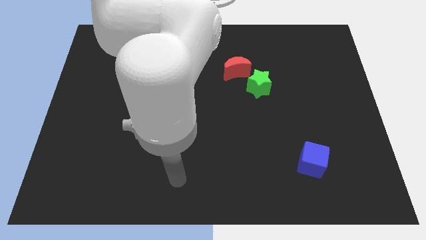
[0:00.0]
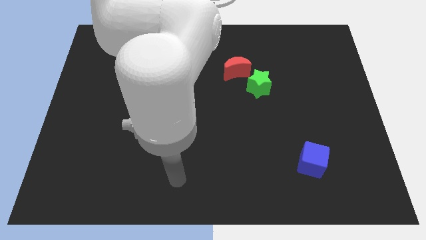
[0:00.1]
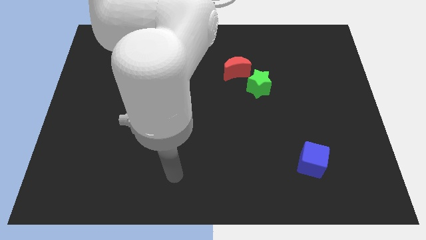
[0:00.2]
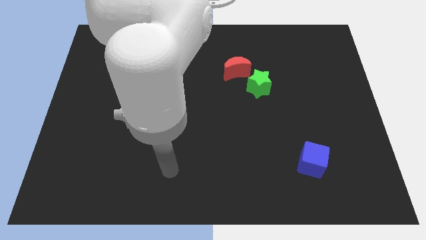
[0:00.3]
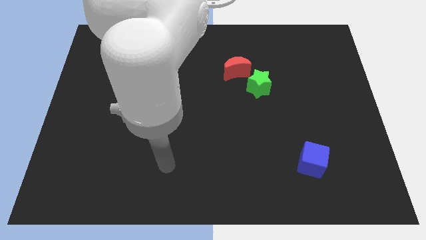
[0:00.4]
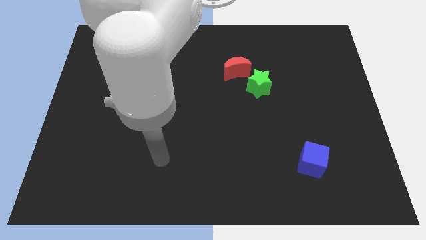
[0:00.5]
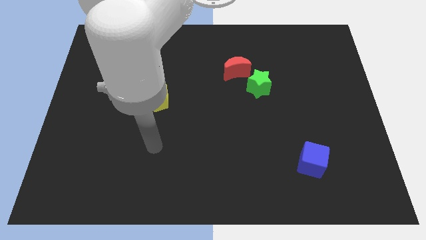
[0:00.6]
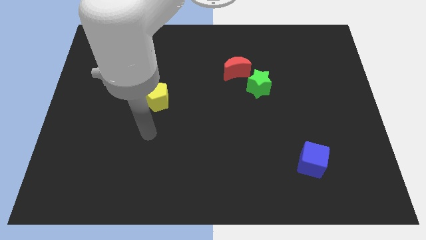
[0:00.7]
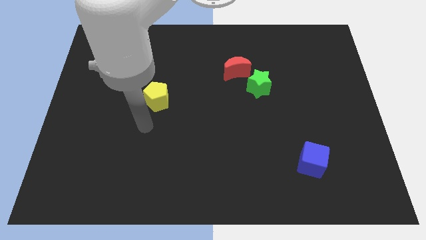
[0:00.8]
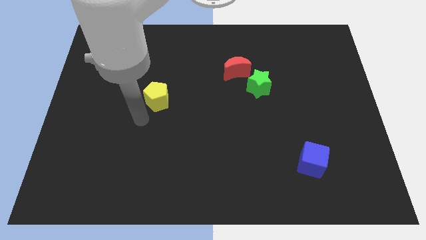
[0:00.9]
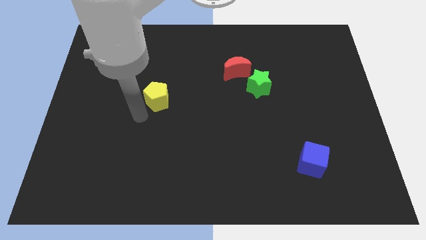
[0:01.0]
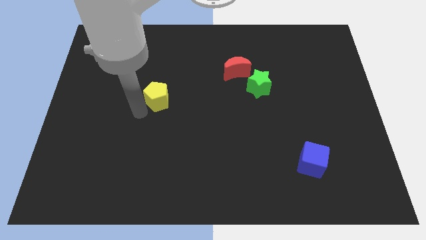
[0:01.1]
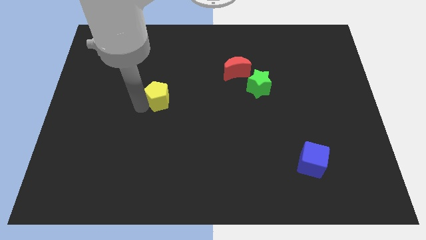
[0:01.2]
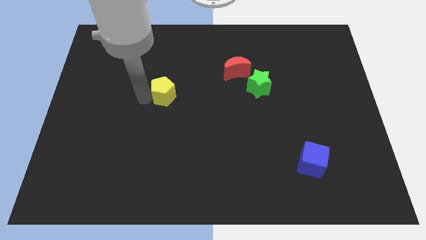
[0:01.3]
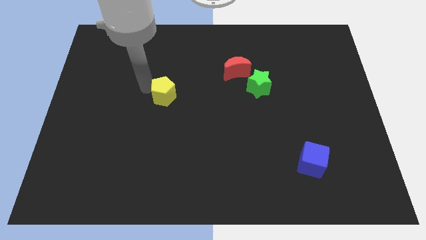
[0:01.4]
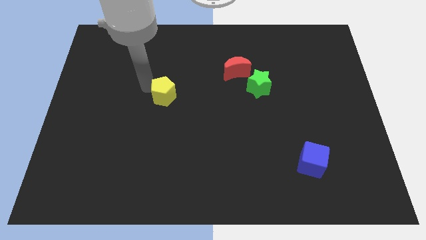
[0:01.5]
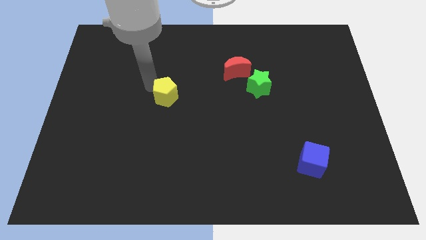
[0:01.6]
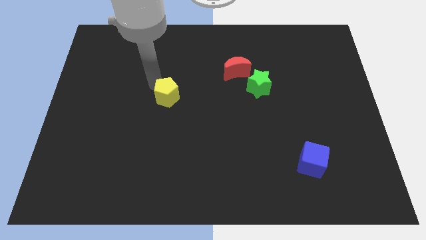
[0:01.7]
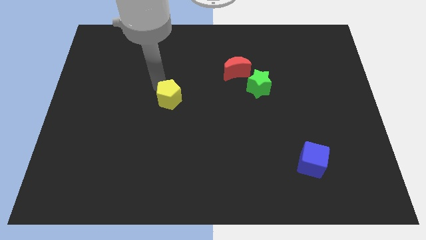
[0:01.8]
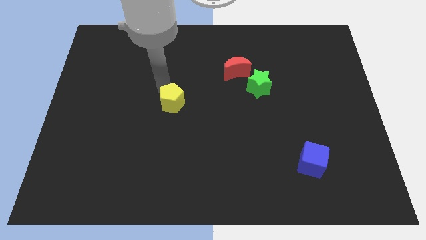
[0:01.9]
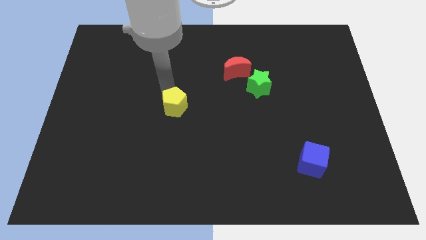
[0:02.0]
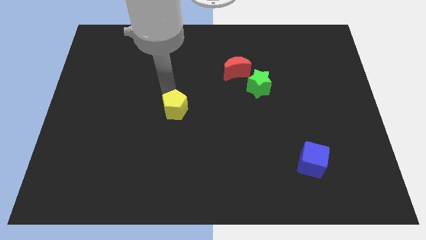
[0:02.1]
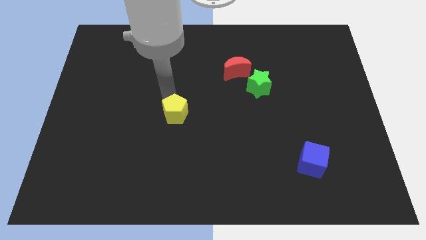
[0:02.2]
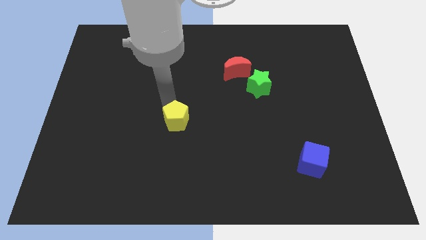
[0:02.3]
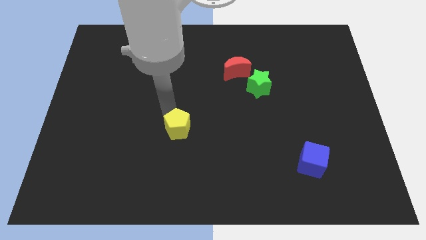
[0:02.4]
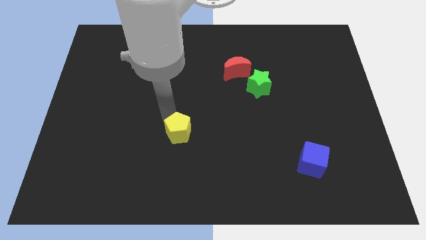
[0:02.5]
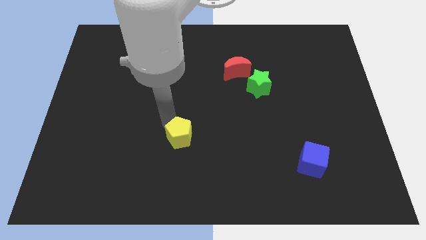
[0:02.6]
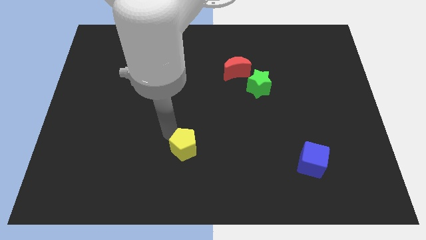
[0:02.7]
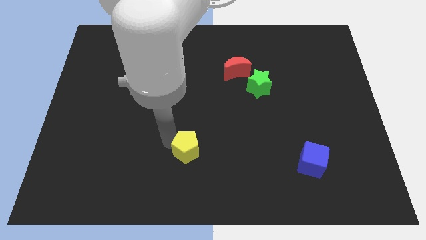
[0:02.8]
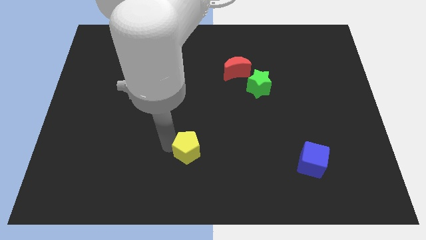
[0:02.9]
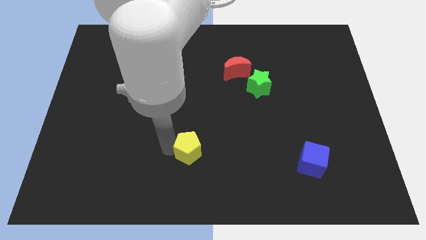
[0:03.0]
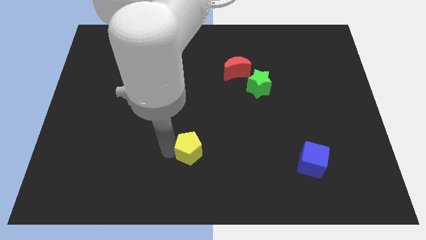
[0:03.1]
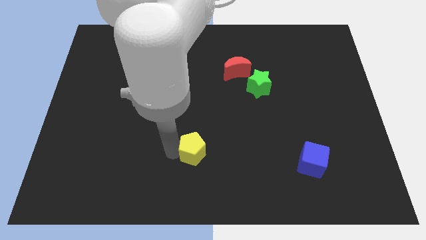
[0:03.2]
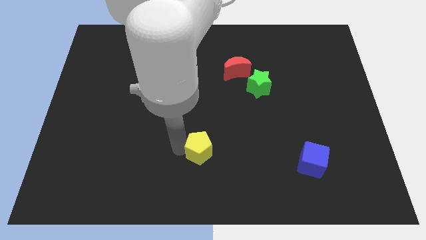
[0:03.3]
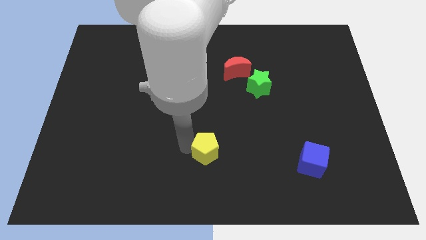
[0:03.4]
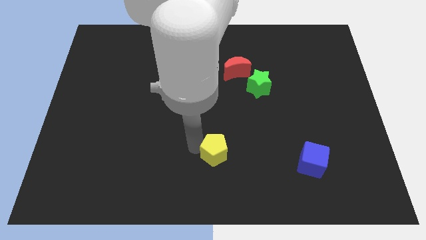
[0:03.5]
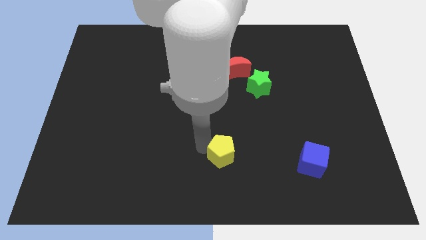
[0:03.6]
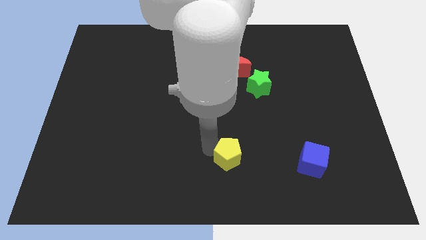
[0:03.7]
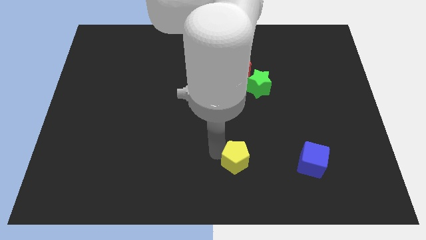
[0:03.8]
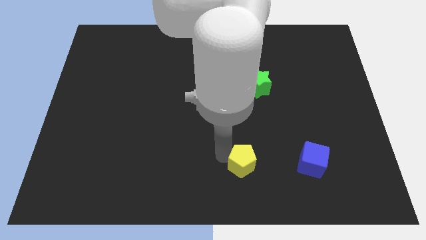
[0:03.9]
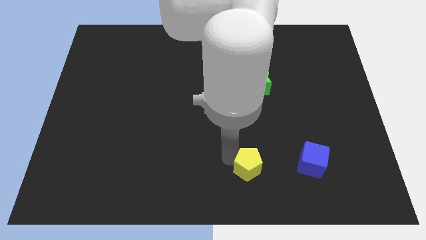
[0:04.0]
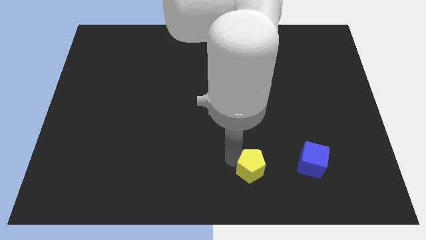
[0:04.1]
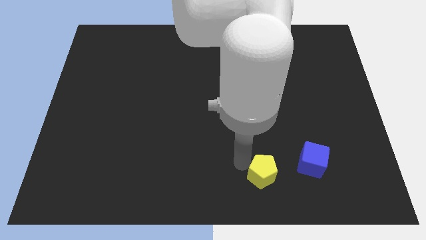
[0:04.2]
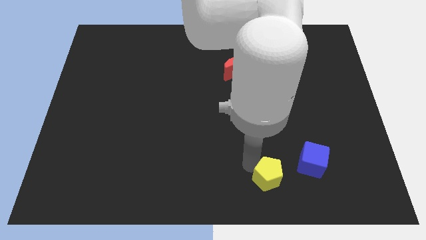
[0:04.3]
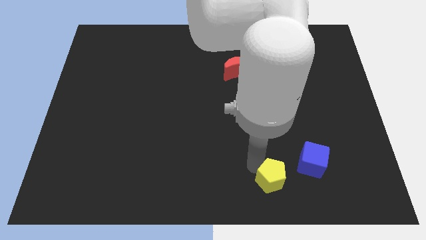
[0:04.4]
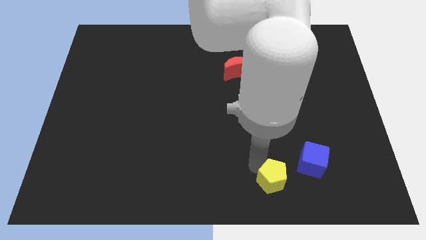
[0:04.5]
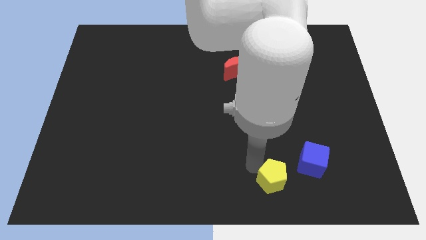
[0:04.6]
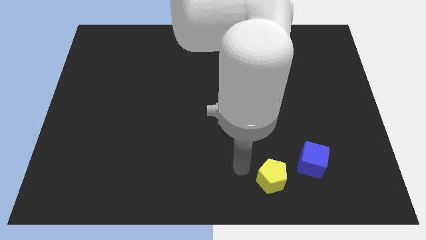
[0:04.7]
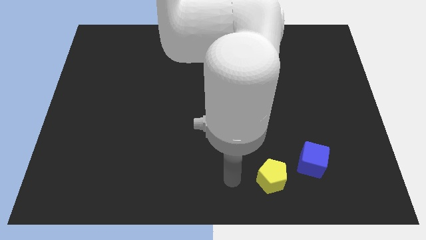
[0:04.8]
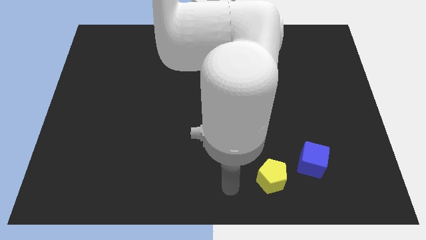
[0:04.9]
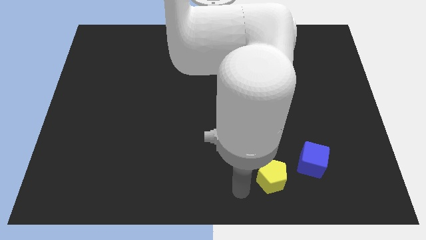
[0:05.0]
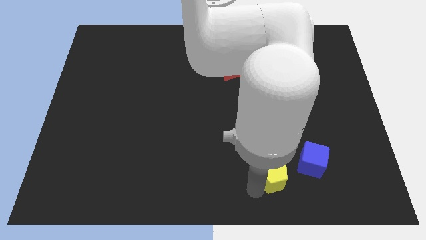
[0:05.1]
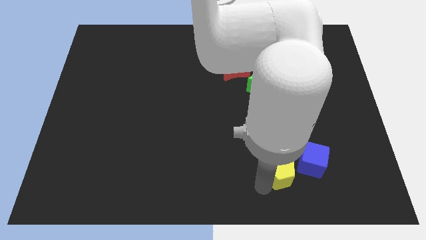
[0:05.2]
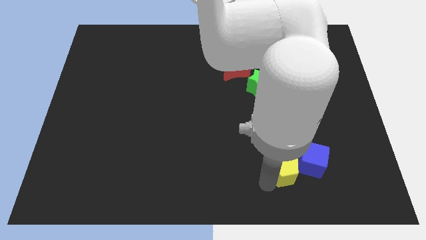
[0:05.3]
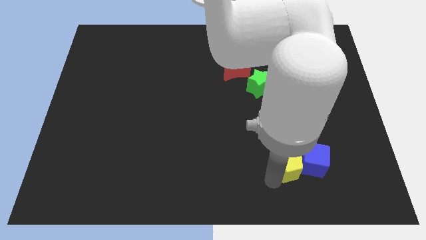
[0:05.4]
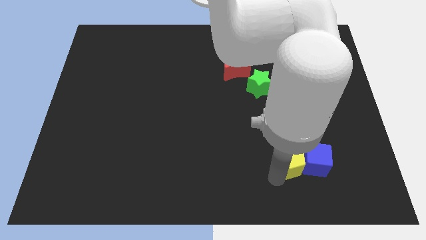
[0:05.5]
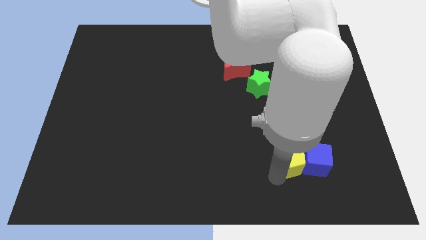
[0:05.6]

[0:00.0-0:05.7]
push the pentagon next to the blue cube

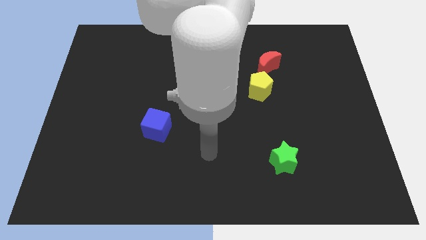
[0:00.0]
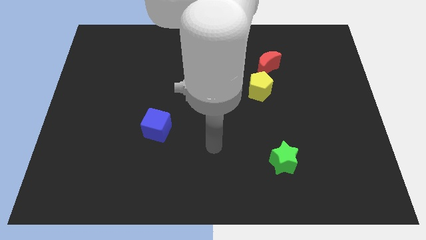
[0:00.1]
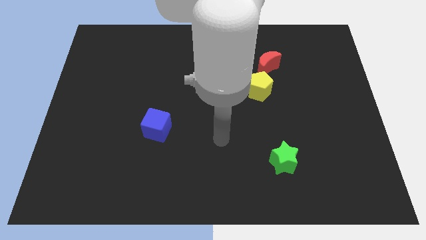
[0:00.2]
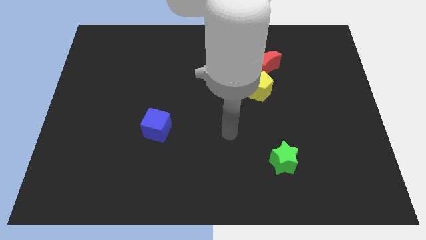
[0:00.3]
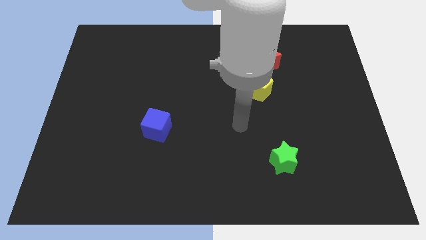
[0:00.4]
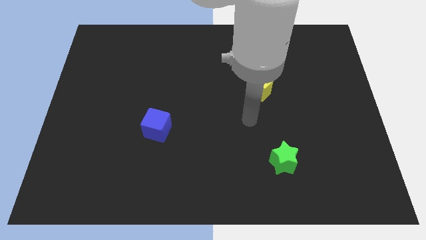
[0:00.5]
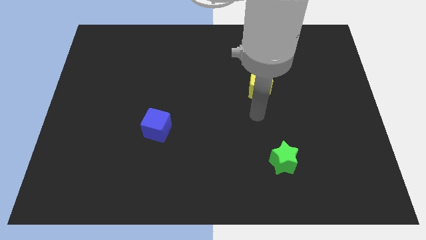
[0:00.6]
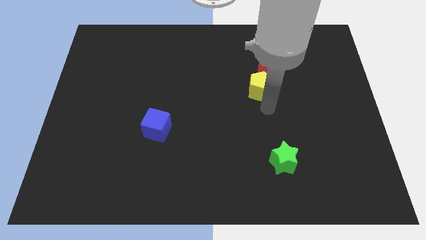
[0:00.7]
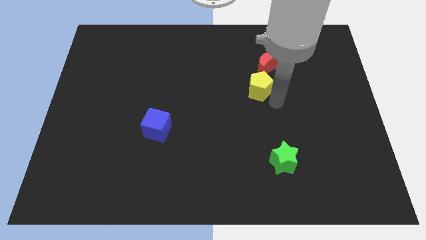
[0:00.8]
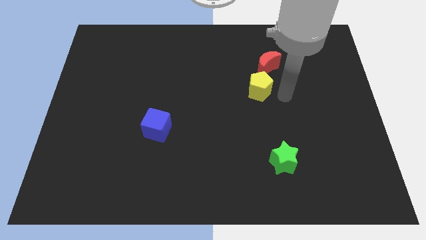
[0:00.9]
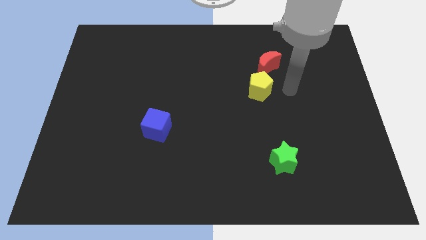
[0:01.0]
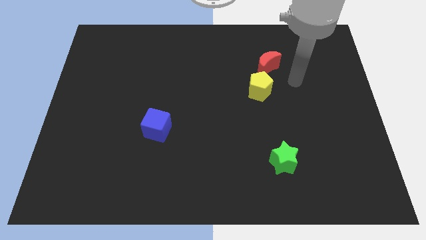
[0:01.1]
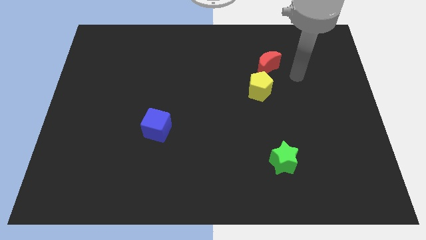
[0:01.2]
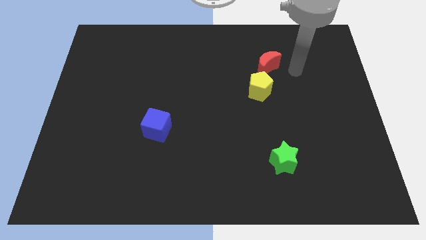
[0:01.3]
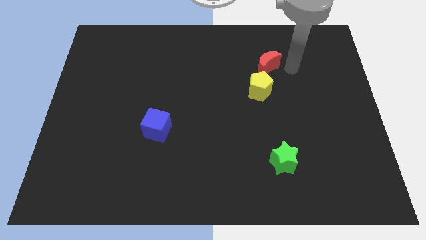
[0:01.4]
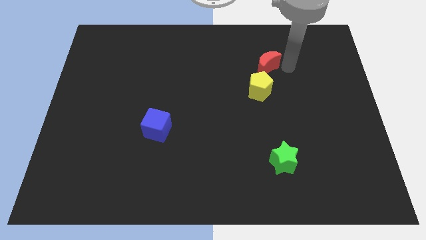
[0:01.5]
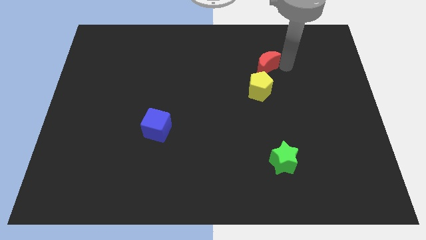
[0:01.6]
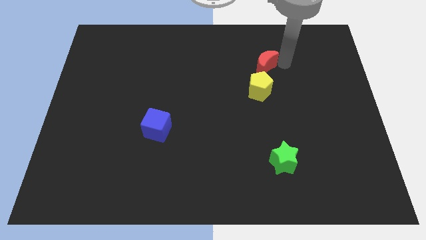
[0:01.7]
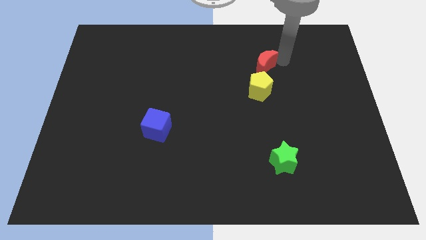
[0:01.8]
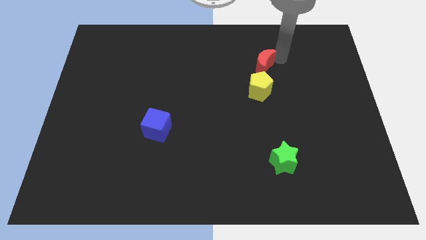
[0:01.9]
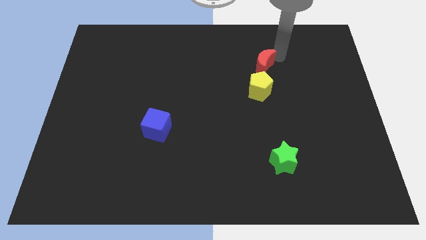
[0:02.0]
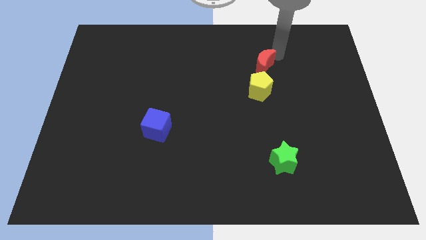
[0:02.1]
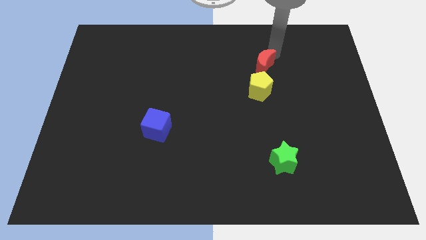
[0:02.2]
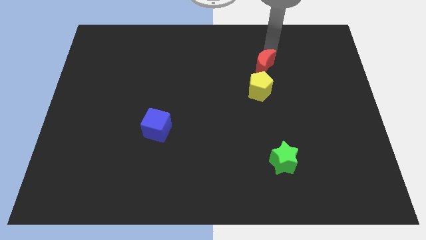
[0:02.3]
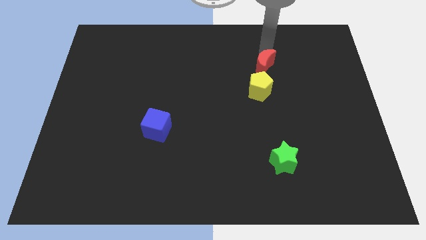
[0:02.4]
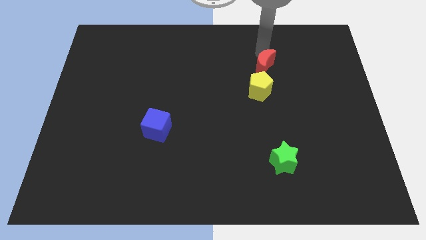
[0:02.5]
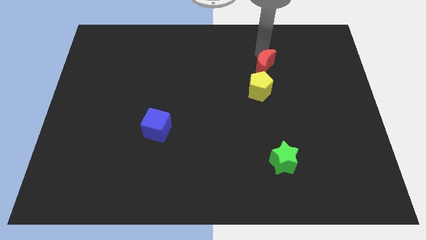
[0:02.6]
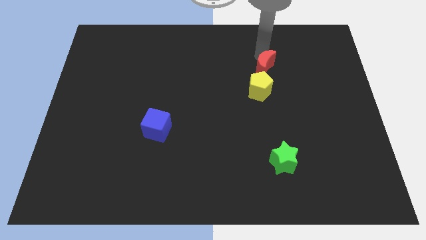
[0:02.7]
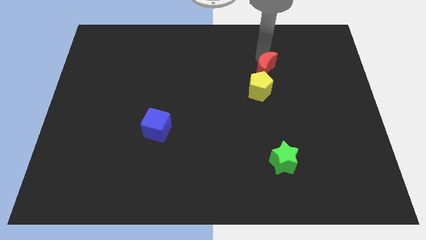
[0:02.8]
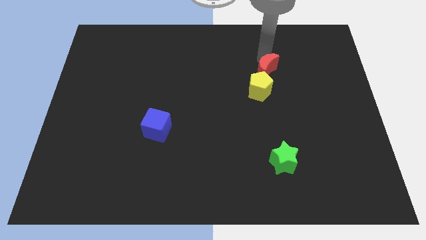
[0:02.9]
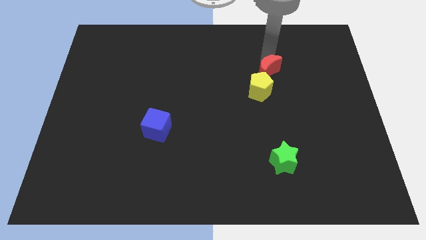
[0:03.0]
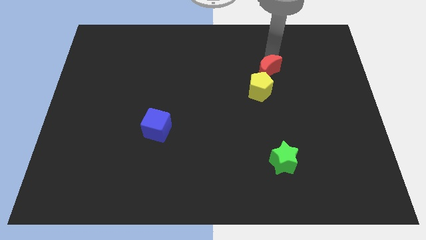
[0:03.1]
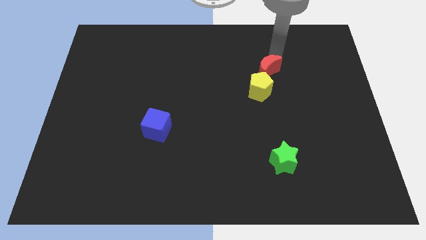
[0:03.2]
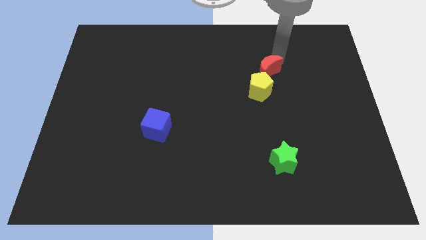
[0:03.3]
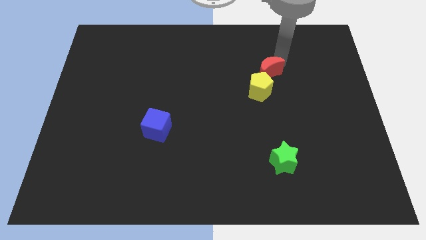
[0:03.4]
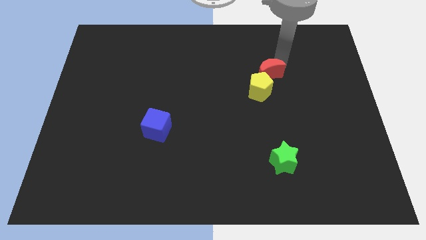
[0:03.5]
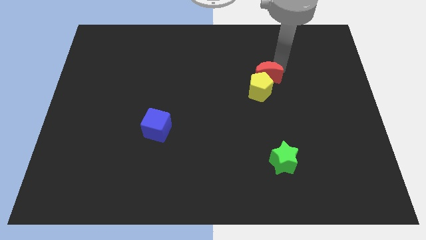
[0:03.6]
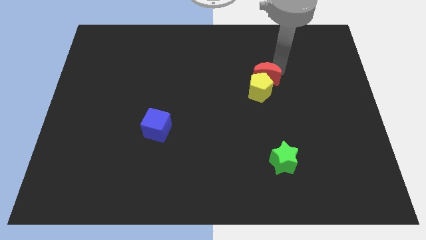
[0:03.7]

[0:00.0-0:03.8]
push the moon to the pentagon
